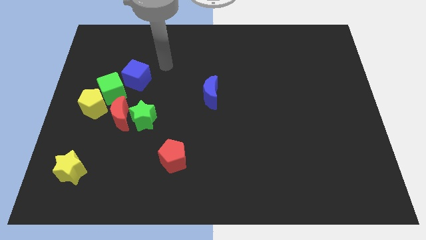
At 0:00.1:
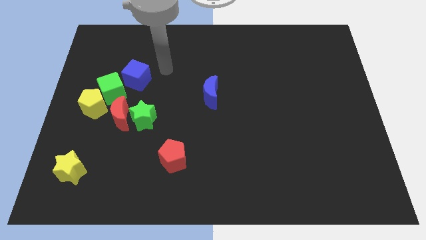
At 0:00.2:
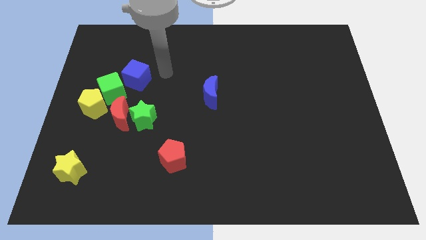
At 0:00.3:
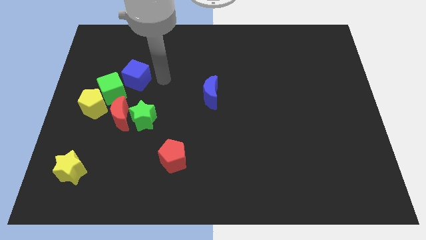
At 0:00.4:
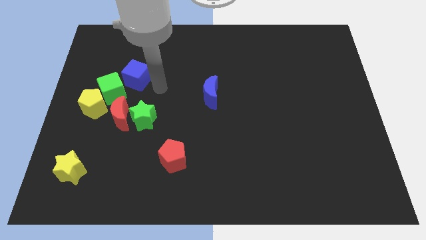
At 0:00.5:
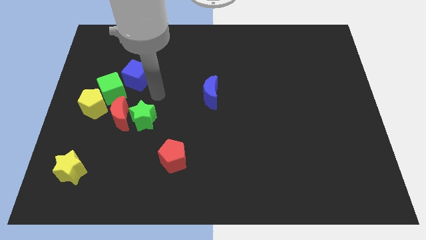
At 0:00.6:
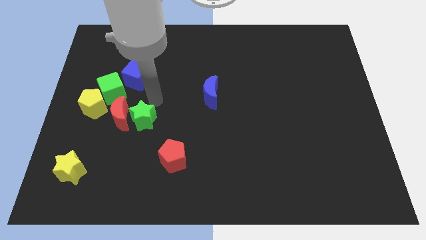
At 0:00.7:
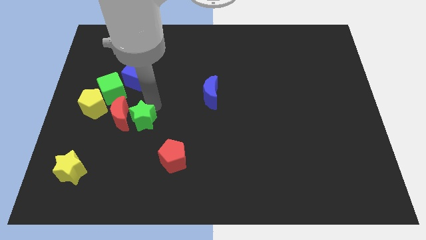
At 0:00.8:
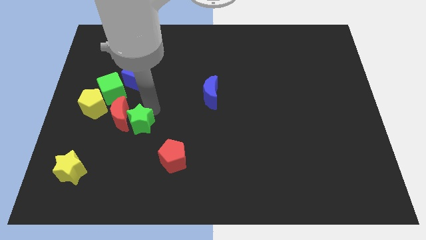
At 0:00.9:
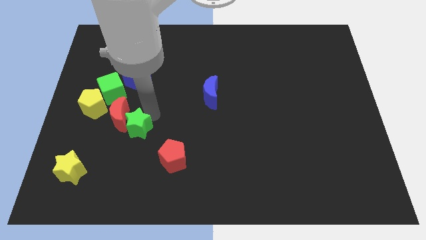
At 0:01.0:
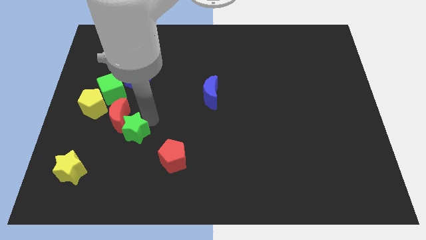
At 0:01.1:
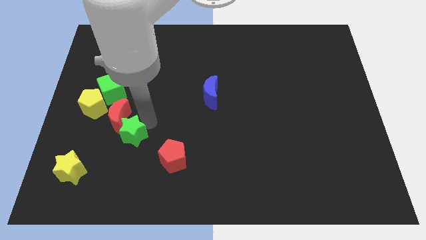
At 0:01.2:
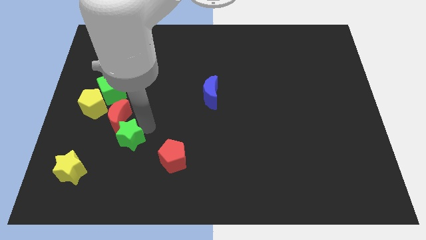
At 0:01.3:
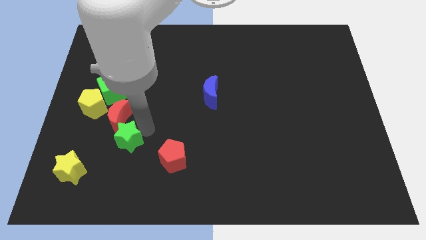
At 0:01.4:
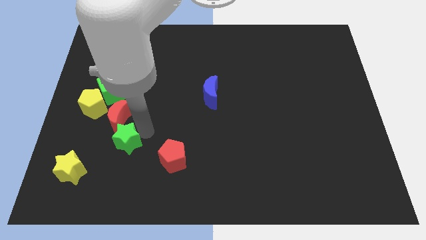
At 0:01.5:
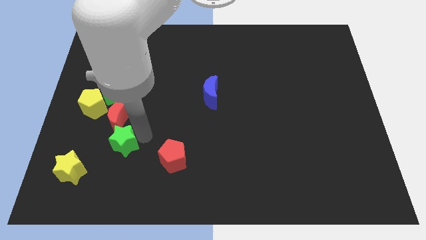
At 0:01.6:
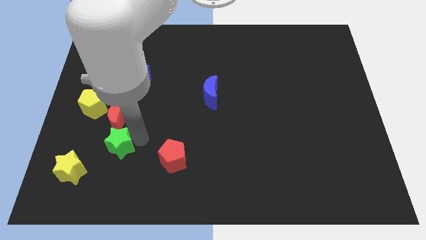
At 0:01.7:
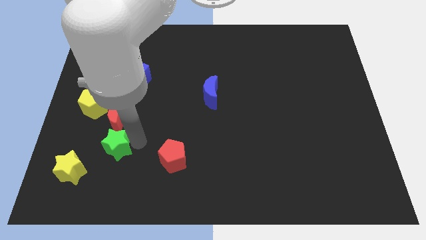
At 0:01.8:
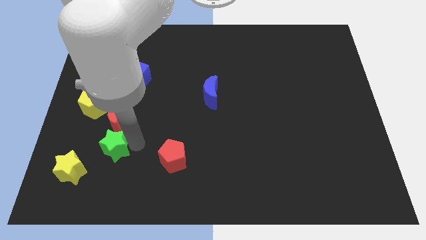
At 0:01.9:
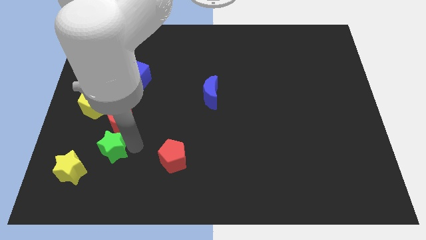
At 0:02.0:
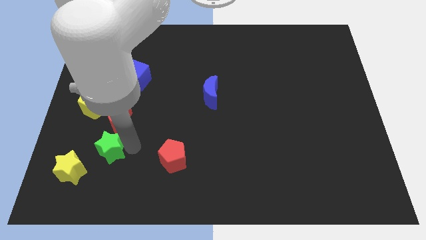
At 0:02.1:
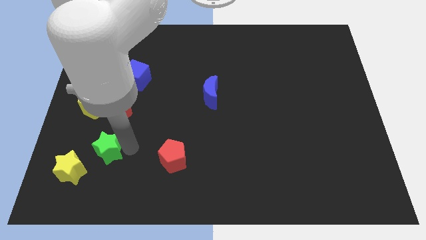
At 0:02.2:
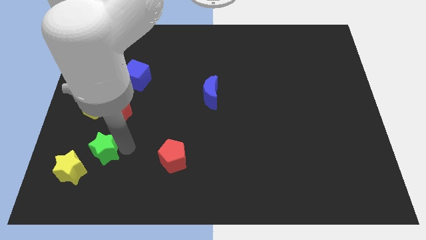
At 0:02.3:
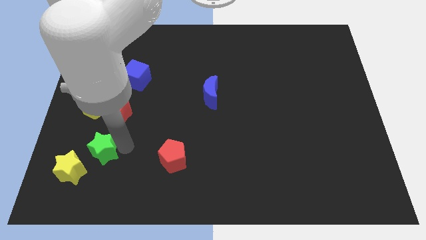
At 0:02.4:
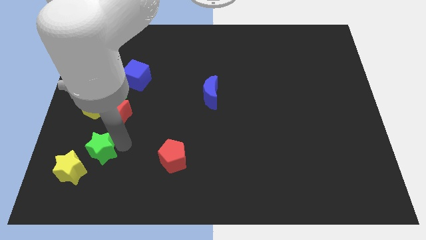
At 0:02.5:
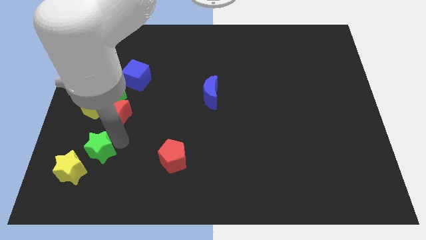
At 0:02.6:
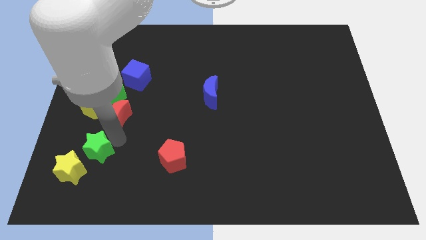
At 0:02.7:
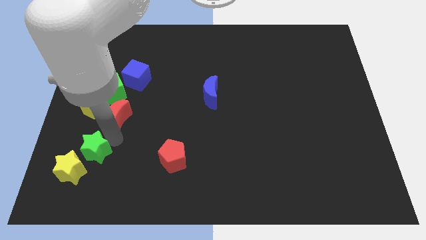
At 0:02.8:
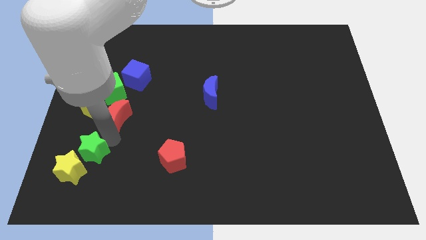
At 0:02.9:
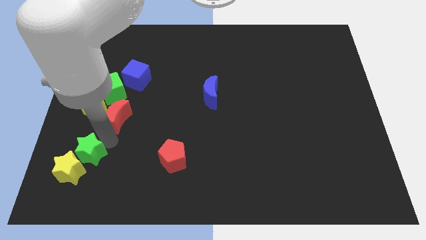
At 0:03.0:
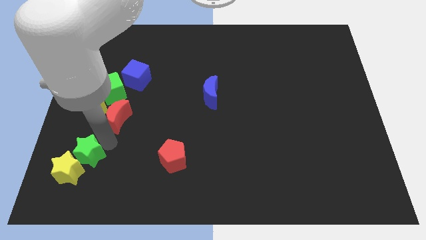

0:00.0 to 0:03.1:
put the green star close to the yellow star

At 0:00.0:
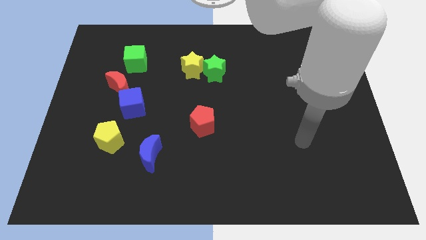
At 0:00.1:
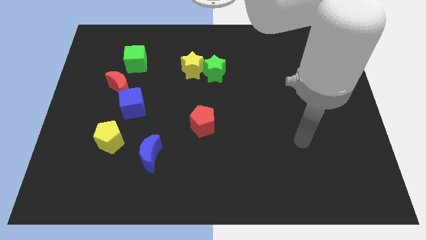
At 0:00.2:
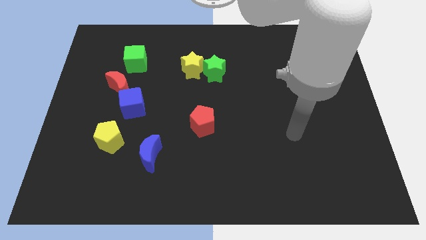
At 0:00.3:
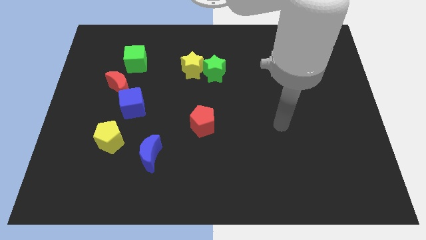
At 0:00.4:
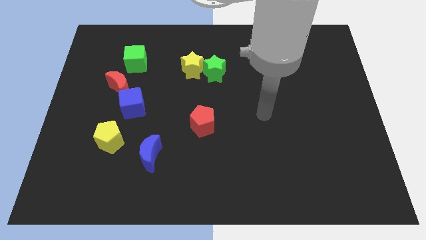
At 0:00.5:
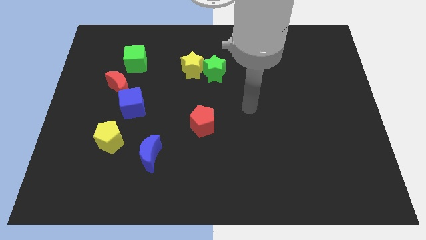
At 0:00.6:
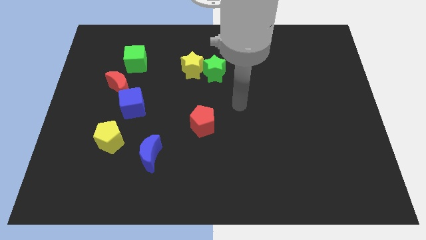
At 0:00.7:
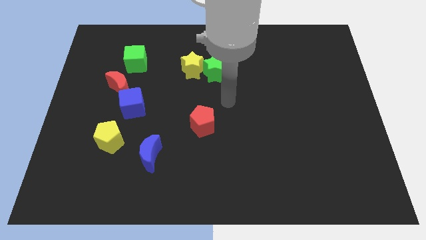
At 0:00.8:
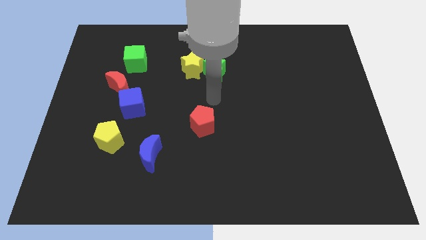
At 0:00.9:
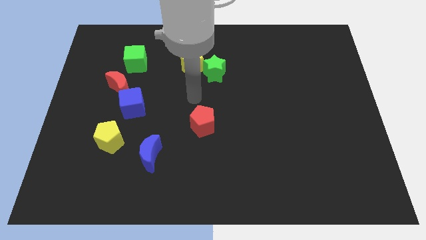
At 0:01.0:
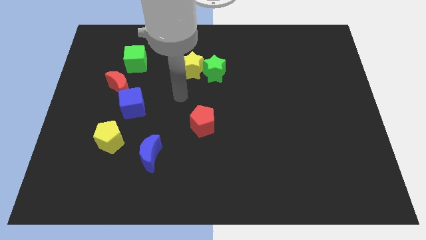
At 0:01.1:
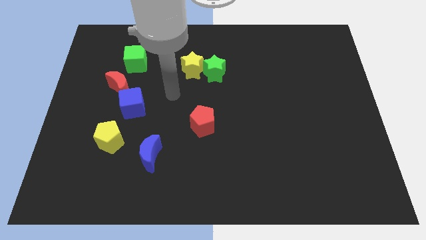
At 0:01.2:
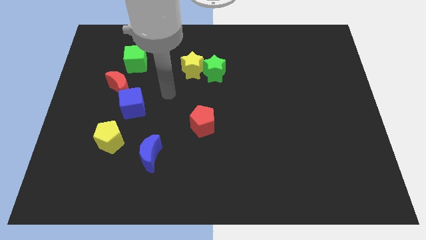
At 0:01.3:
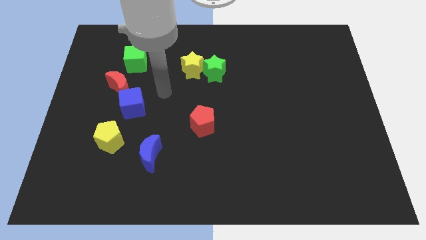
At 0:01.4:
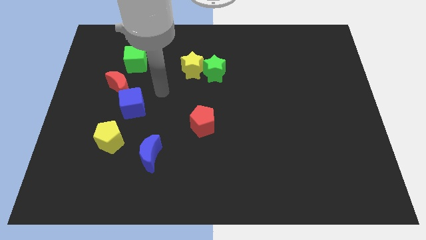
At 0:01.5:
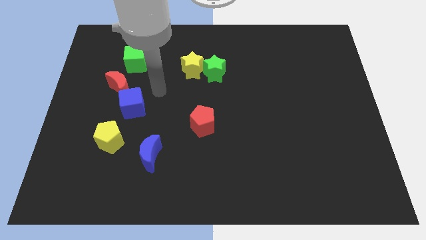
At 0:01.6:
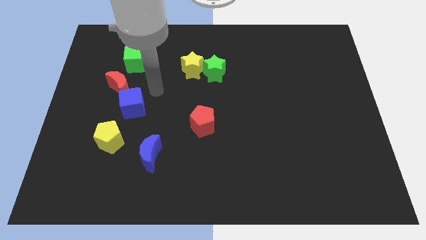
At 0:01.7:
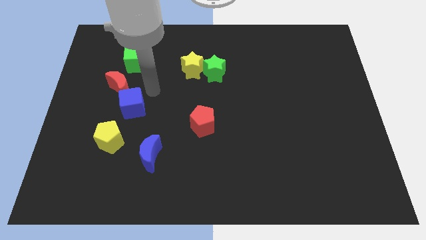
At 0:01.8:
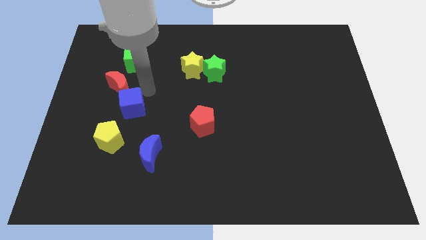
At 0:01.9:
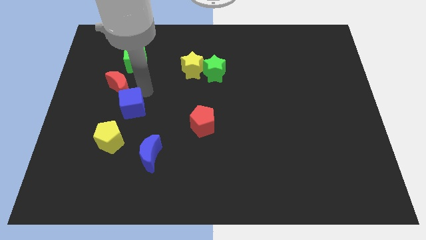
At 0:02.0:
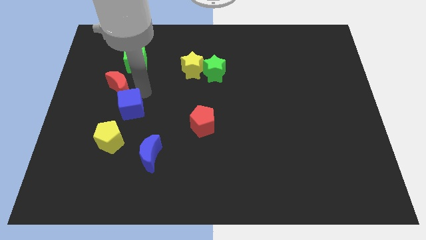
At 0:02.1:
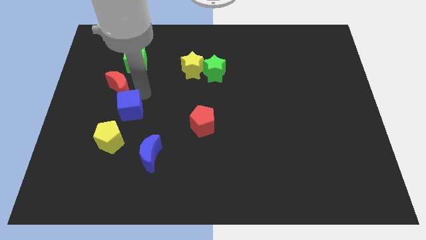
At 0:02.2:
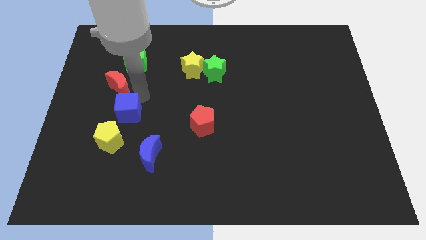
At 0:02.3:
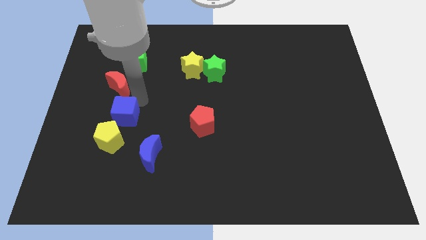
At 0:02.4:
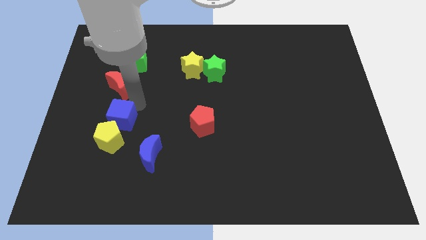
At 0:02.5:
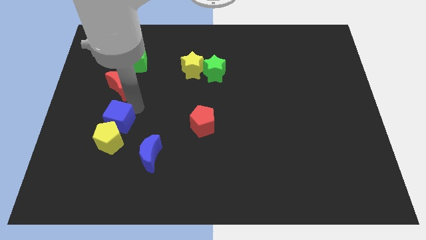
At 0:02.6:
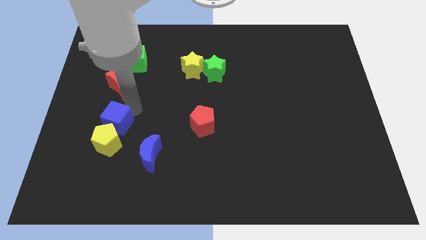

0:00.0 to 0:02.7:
move the blue cube next to the yellow pentagon

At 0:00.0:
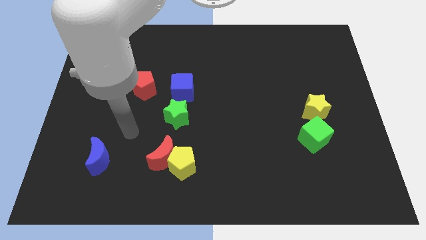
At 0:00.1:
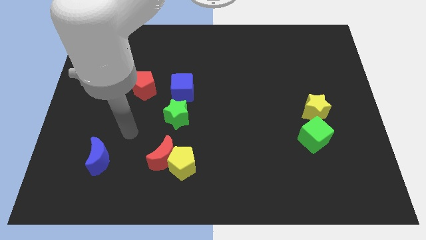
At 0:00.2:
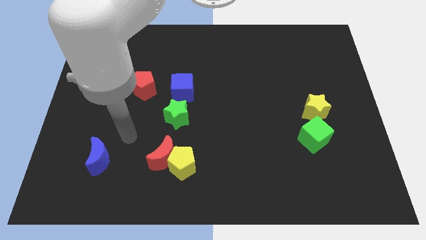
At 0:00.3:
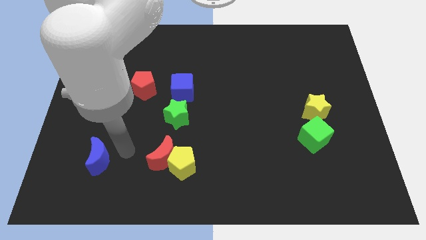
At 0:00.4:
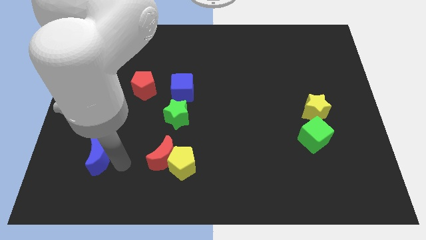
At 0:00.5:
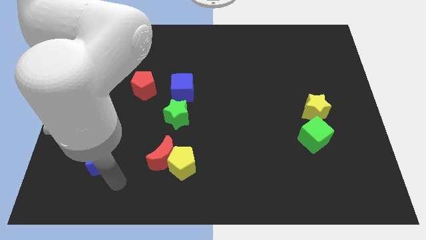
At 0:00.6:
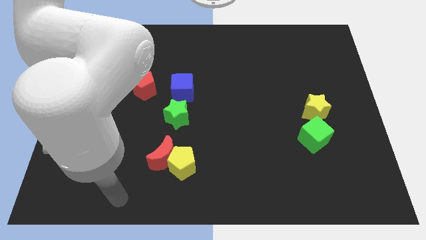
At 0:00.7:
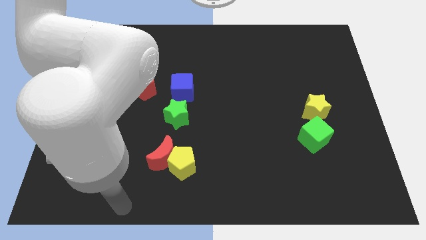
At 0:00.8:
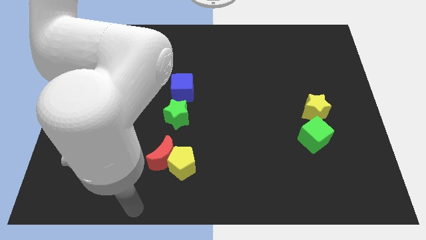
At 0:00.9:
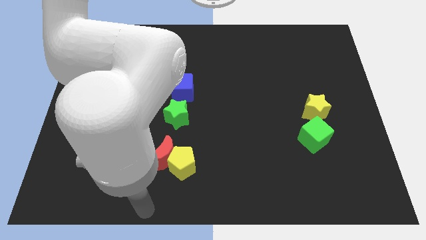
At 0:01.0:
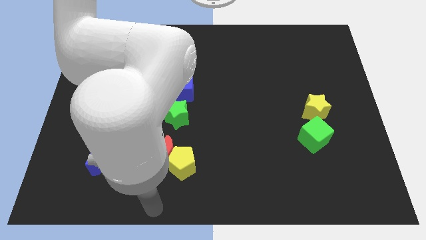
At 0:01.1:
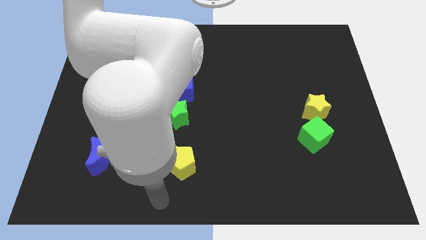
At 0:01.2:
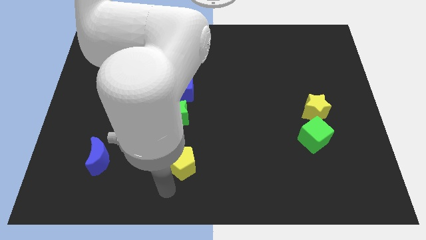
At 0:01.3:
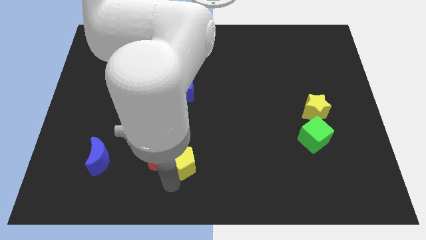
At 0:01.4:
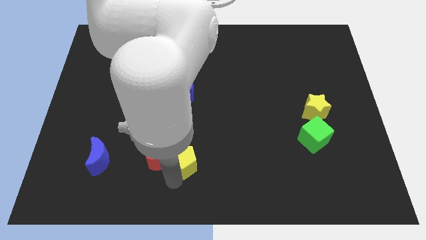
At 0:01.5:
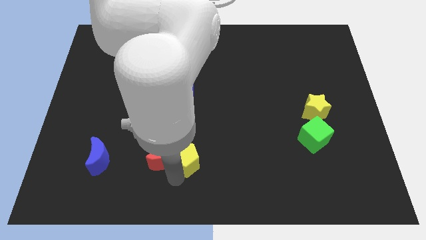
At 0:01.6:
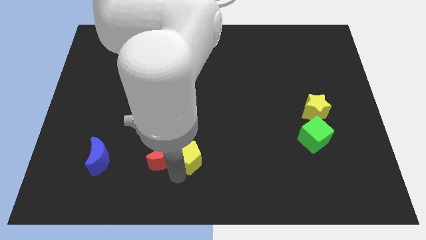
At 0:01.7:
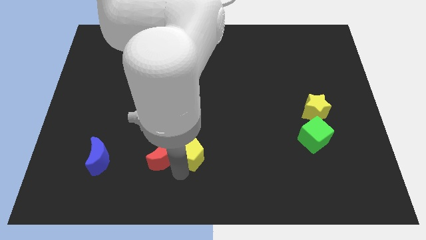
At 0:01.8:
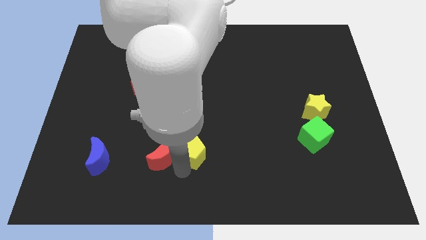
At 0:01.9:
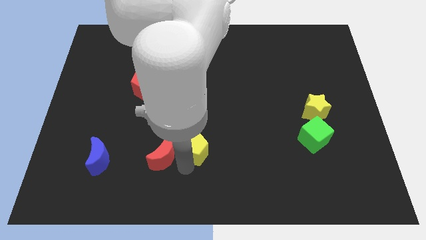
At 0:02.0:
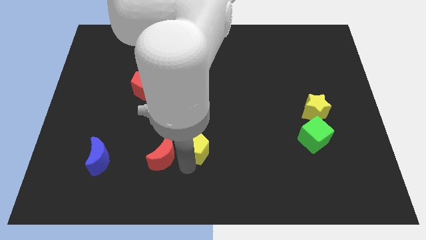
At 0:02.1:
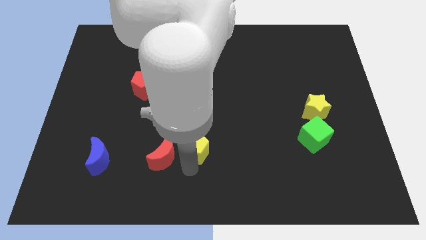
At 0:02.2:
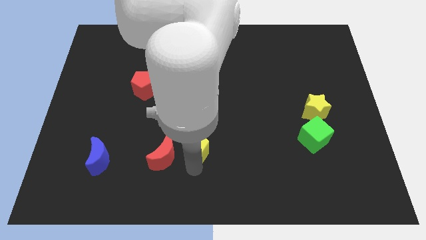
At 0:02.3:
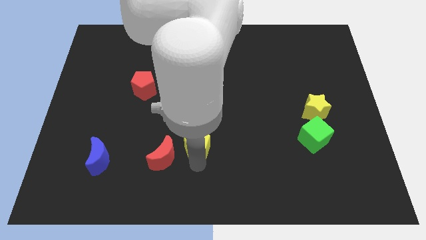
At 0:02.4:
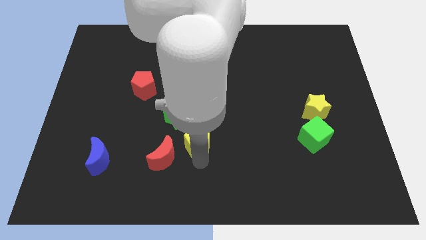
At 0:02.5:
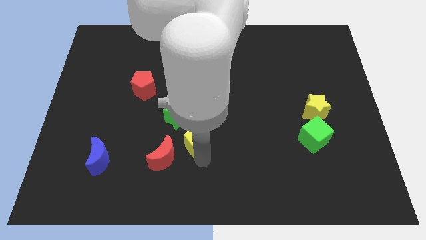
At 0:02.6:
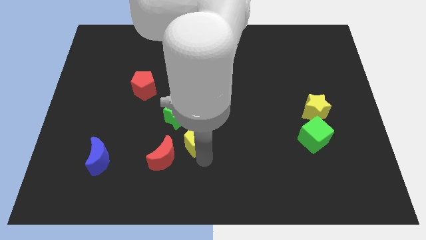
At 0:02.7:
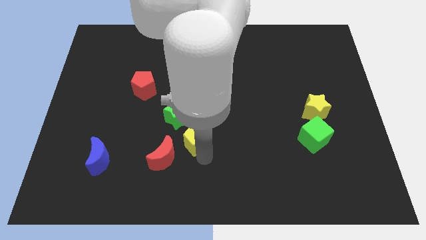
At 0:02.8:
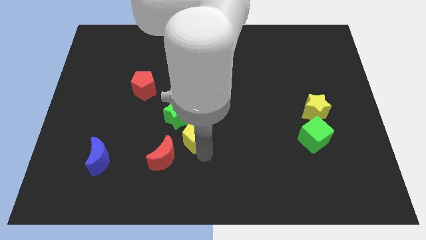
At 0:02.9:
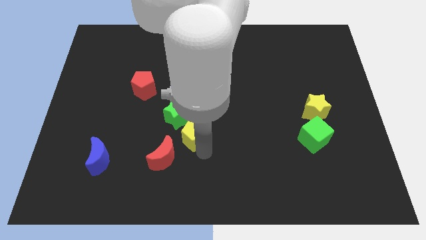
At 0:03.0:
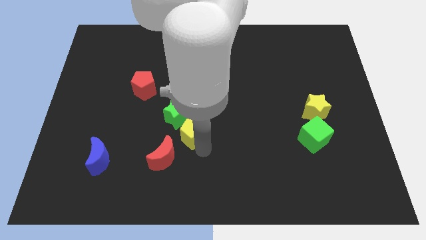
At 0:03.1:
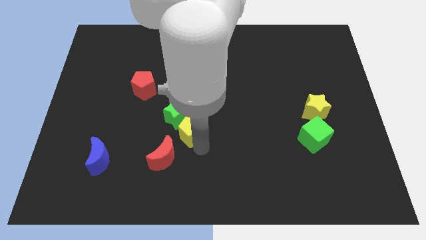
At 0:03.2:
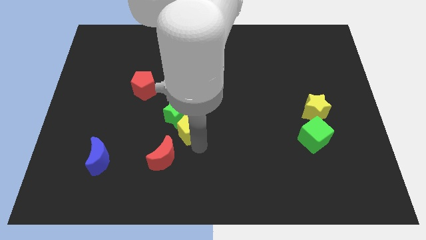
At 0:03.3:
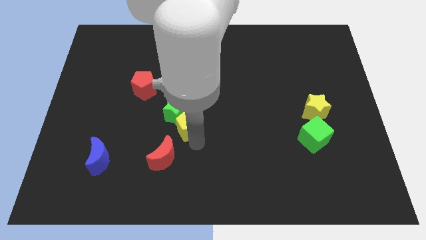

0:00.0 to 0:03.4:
push the yellow pentagon close to the green star
